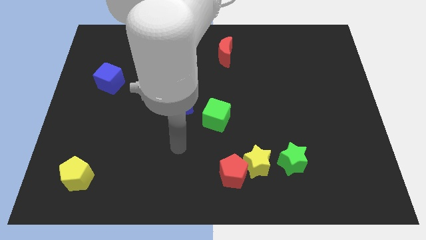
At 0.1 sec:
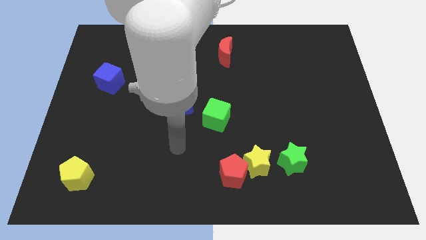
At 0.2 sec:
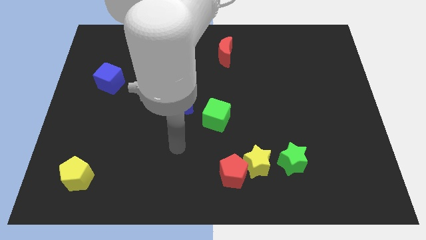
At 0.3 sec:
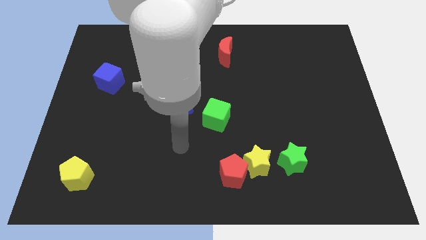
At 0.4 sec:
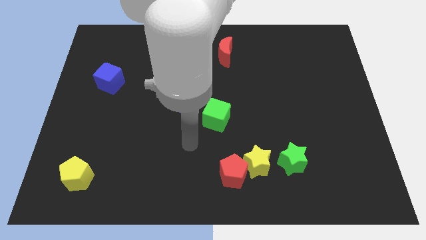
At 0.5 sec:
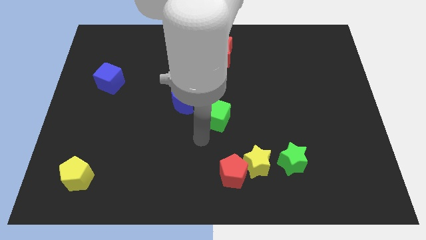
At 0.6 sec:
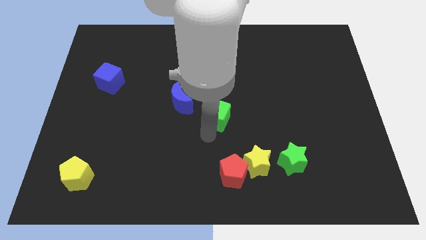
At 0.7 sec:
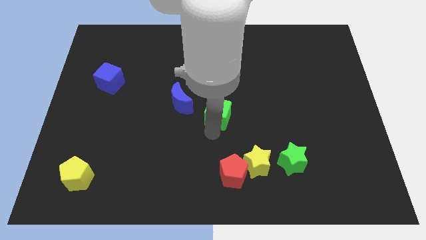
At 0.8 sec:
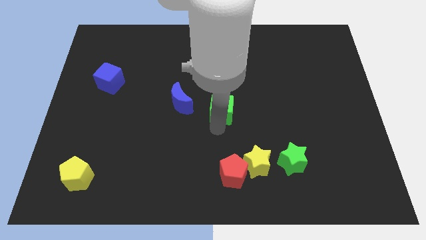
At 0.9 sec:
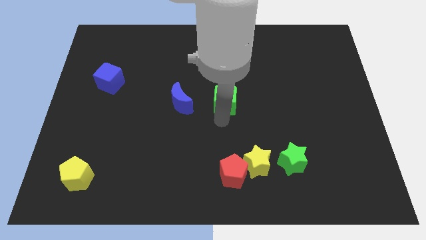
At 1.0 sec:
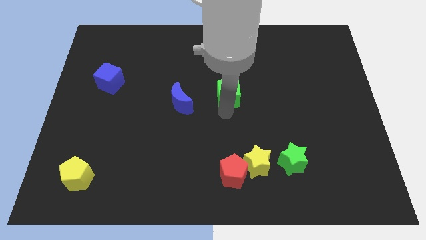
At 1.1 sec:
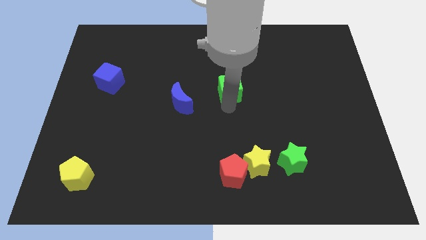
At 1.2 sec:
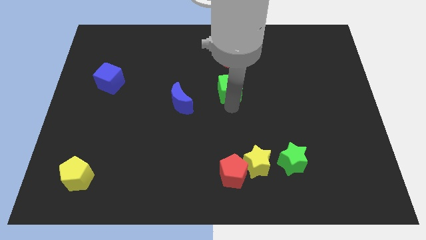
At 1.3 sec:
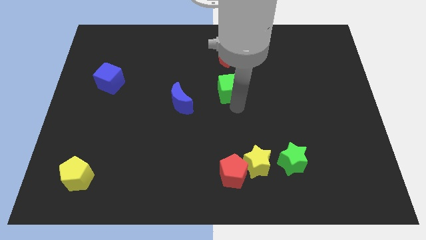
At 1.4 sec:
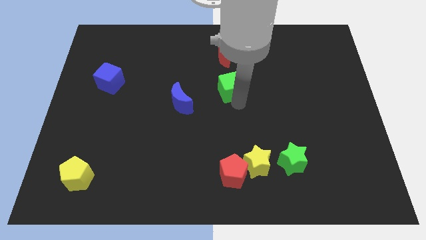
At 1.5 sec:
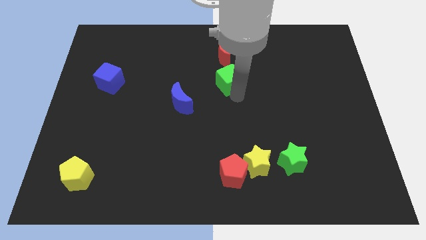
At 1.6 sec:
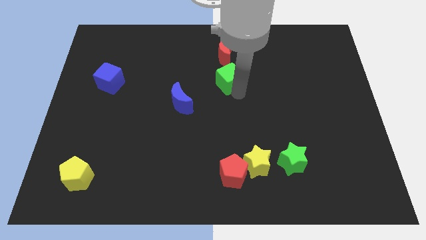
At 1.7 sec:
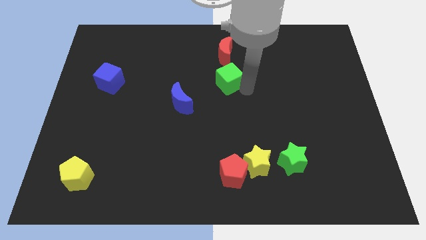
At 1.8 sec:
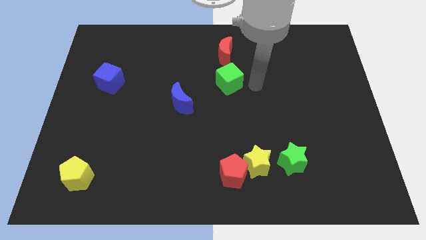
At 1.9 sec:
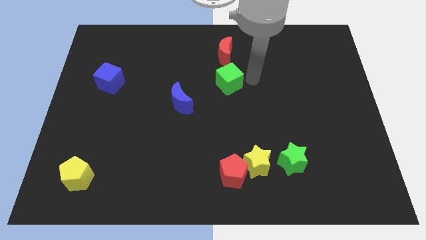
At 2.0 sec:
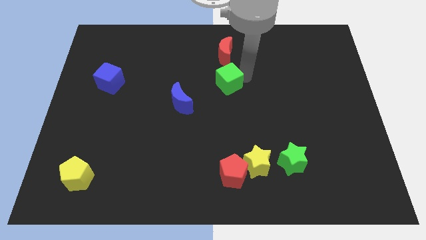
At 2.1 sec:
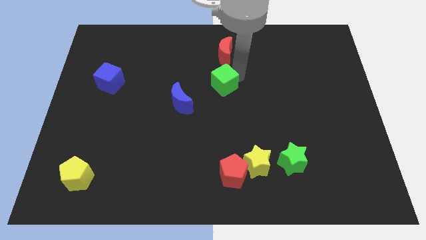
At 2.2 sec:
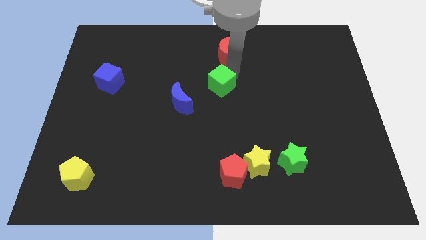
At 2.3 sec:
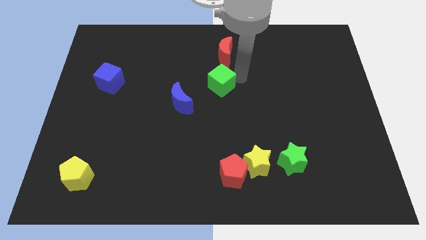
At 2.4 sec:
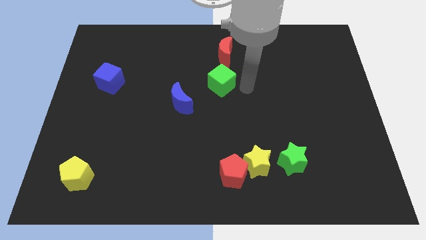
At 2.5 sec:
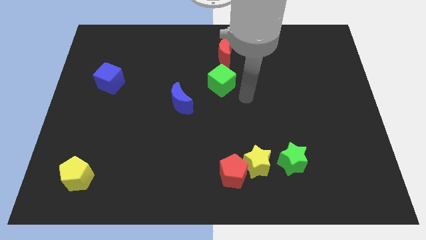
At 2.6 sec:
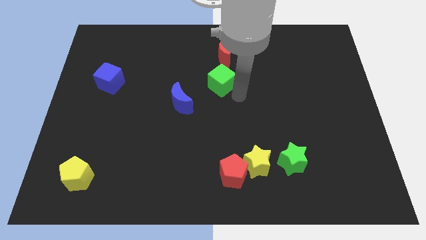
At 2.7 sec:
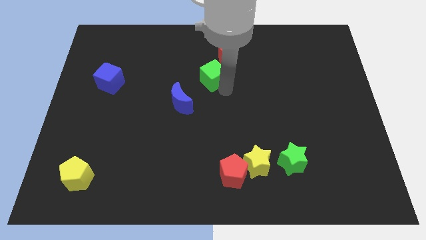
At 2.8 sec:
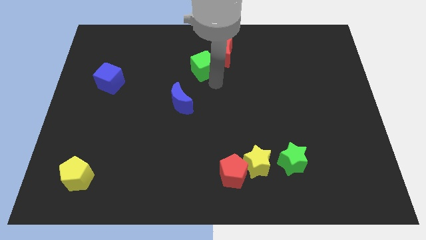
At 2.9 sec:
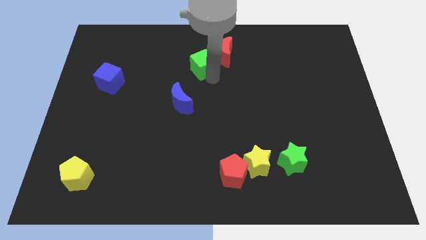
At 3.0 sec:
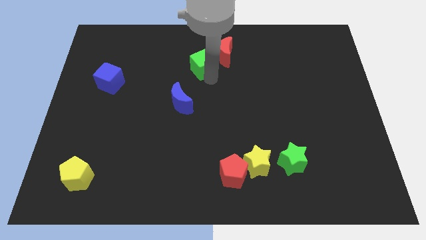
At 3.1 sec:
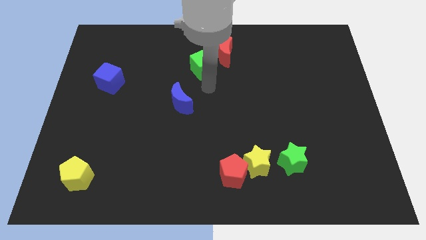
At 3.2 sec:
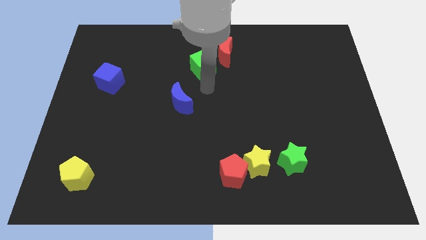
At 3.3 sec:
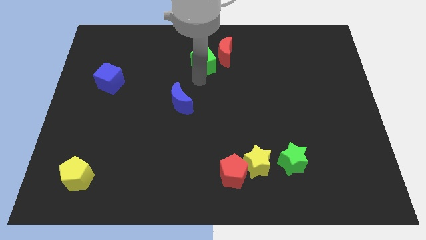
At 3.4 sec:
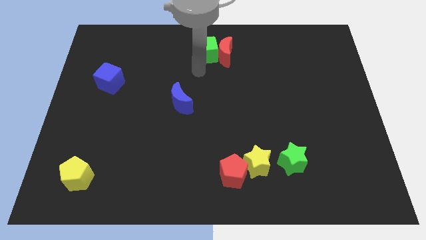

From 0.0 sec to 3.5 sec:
move the green cube to the left of the red moon

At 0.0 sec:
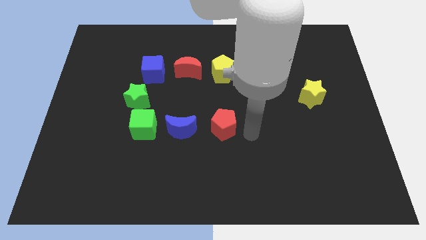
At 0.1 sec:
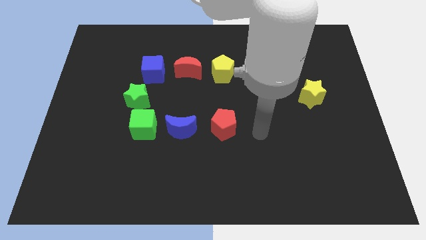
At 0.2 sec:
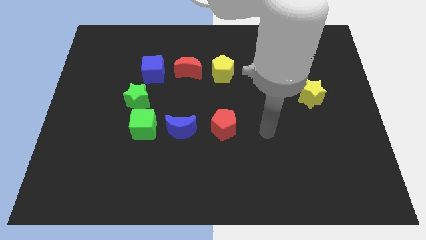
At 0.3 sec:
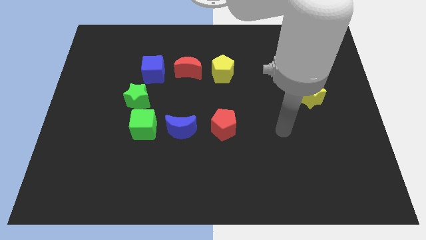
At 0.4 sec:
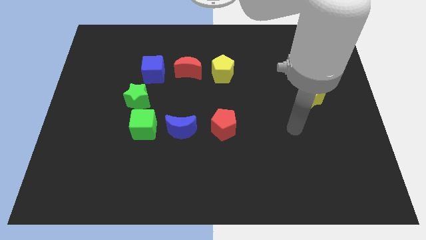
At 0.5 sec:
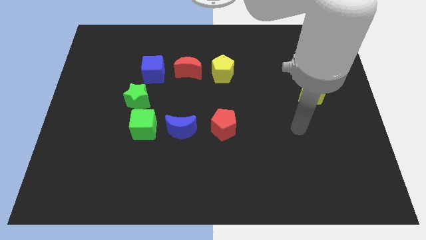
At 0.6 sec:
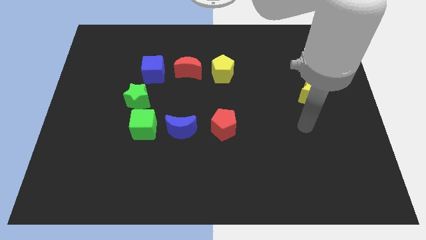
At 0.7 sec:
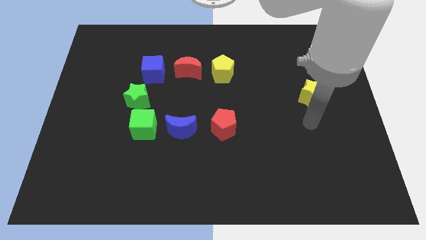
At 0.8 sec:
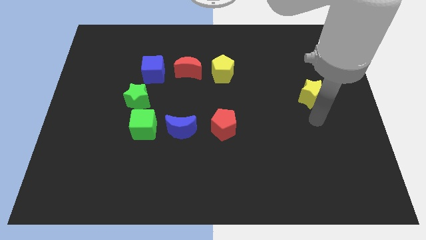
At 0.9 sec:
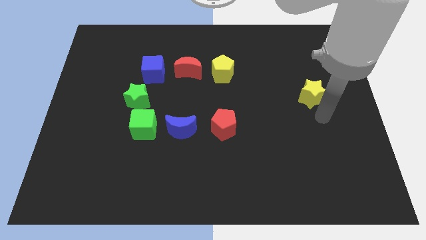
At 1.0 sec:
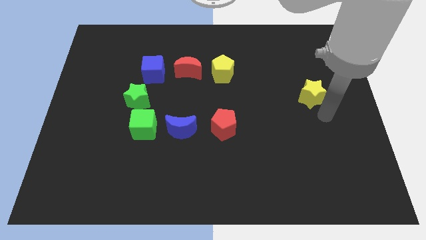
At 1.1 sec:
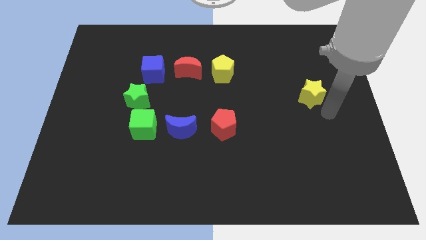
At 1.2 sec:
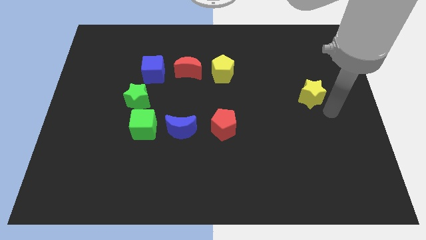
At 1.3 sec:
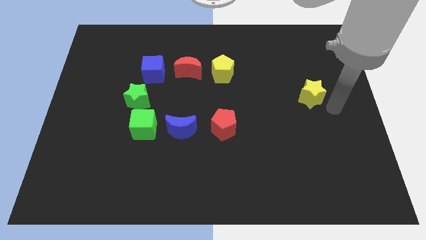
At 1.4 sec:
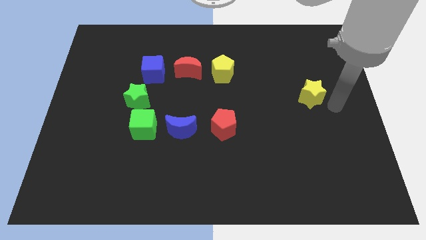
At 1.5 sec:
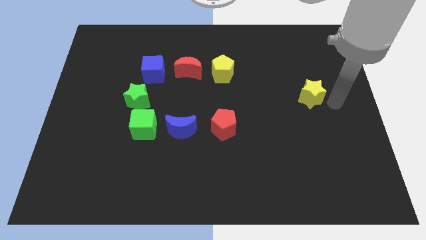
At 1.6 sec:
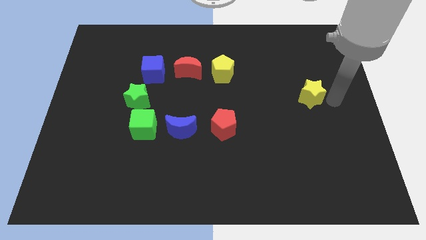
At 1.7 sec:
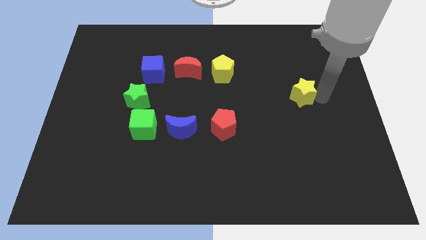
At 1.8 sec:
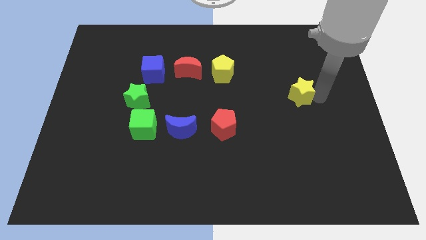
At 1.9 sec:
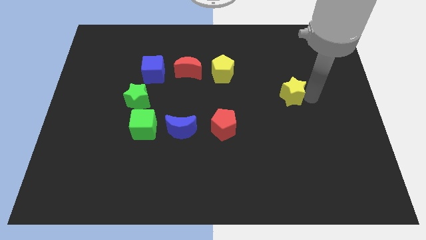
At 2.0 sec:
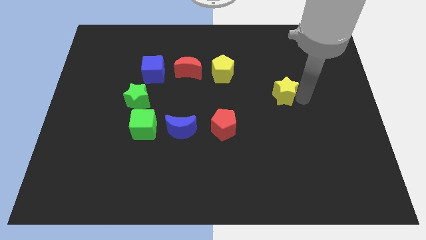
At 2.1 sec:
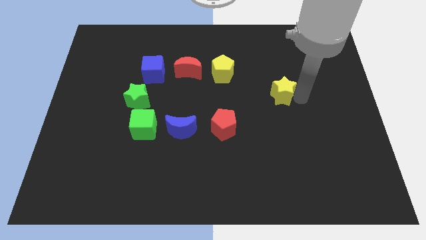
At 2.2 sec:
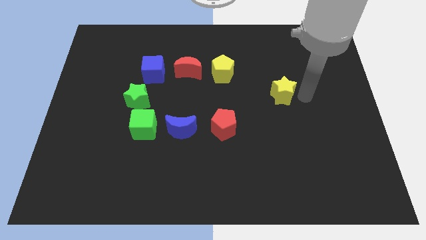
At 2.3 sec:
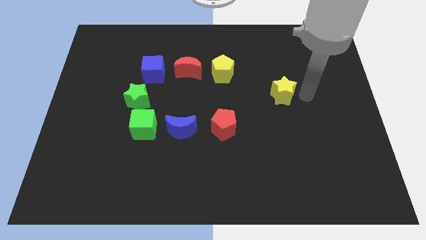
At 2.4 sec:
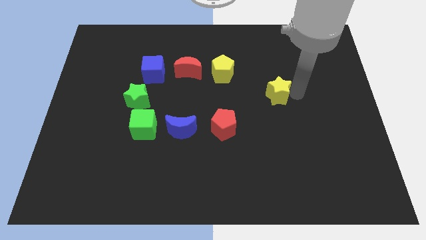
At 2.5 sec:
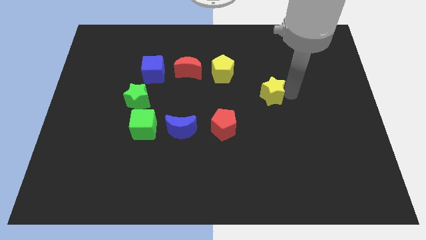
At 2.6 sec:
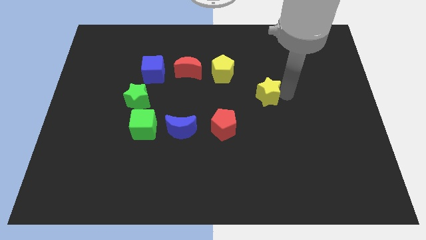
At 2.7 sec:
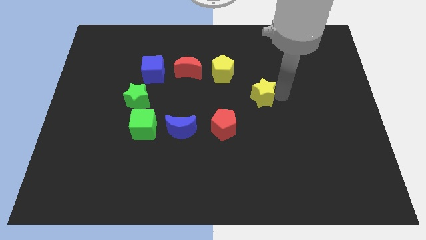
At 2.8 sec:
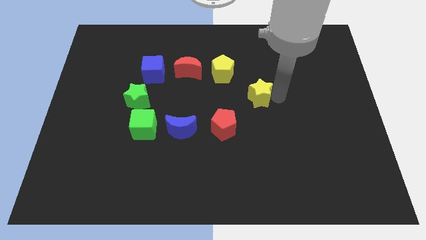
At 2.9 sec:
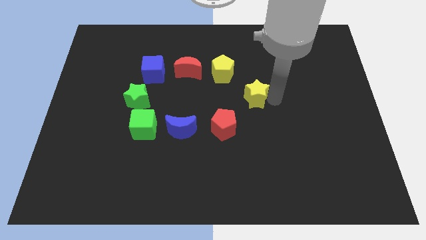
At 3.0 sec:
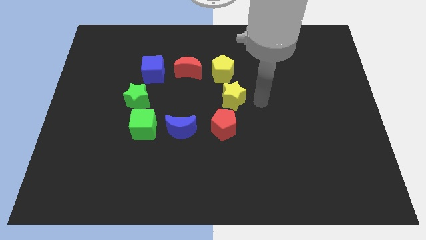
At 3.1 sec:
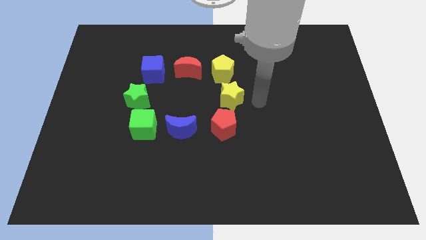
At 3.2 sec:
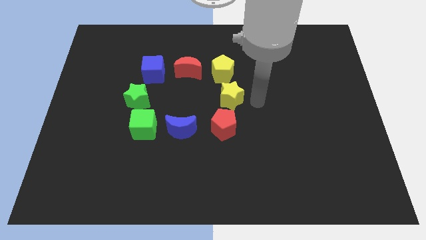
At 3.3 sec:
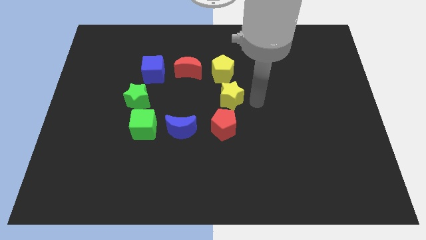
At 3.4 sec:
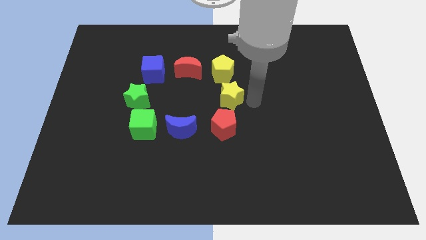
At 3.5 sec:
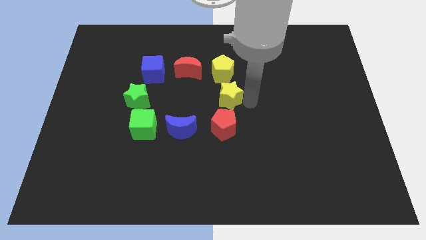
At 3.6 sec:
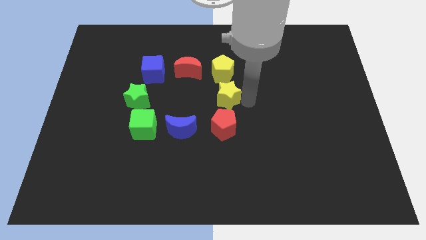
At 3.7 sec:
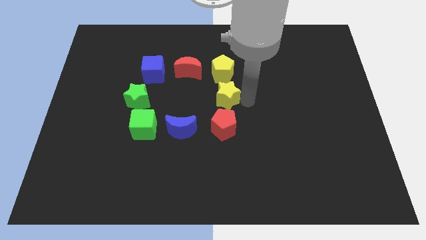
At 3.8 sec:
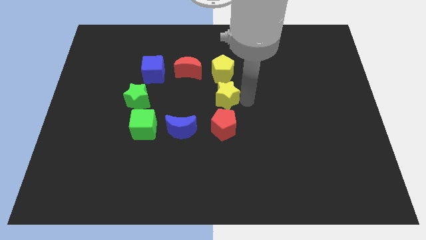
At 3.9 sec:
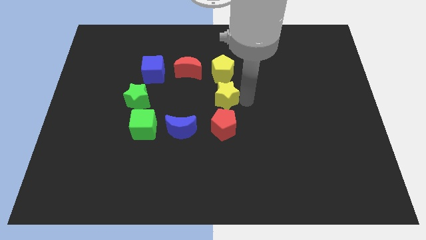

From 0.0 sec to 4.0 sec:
move the yellow star above the red pentagon

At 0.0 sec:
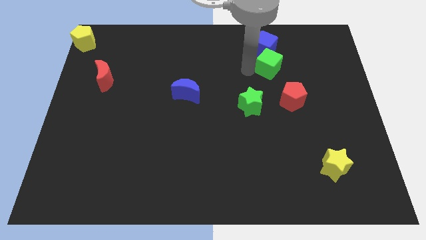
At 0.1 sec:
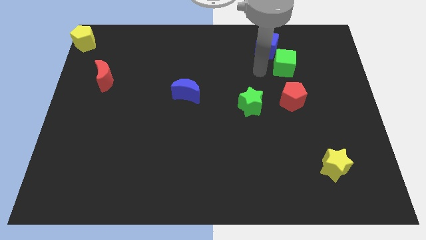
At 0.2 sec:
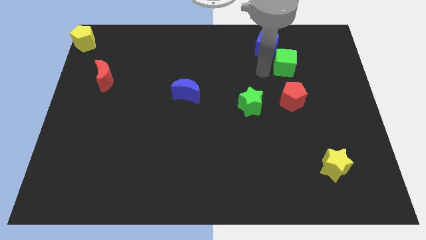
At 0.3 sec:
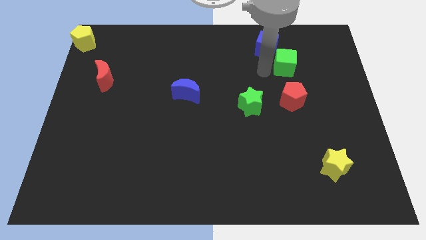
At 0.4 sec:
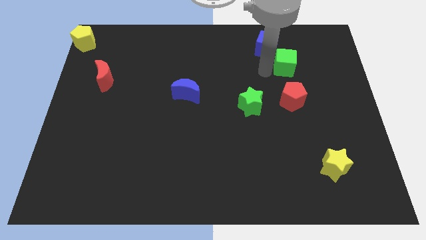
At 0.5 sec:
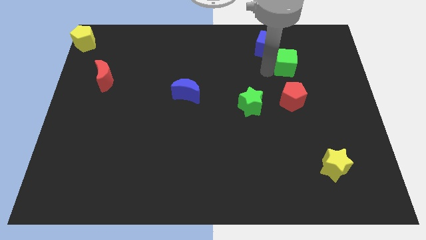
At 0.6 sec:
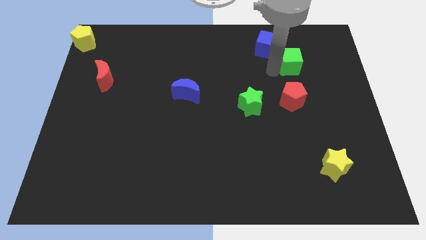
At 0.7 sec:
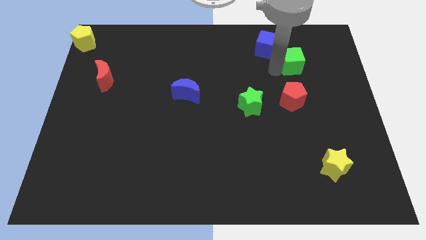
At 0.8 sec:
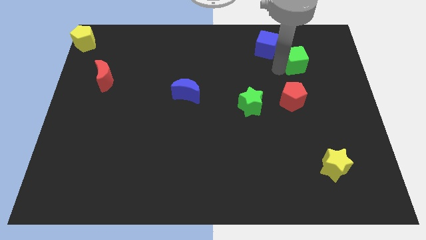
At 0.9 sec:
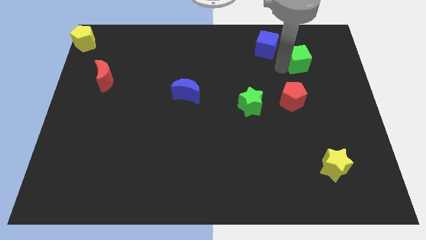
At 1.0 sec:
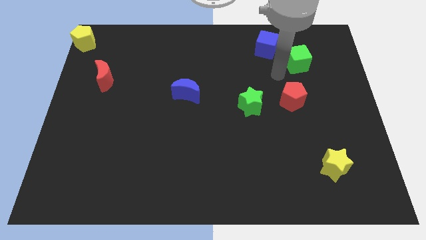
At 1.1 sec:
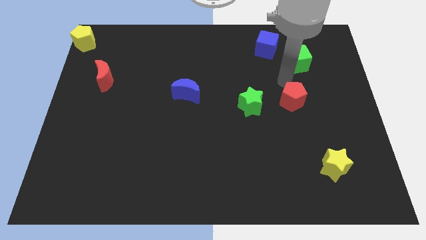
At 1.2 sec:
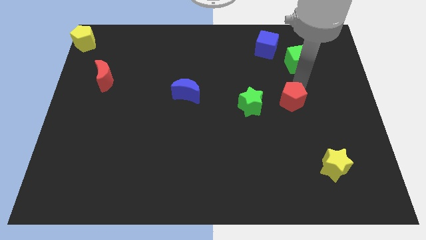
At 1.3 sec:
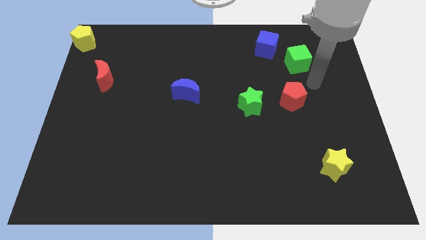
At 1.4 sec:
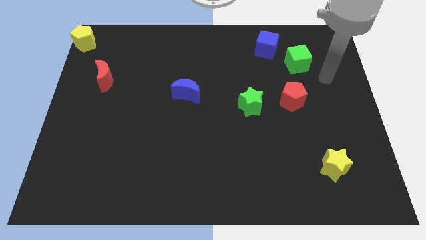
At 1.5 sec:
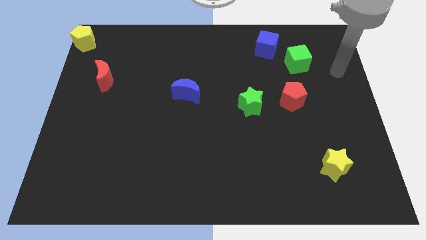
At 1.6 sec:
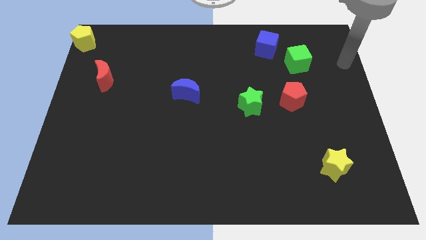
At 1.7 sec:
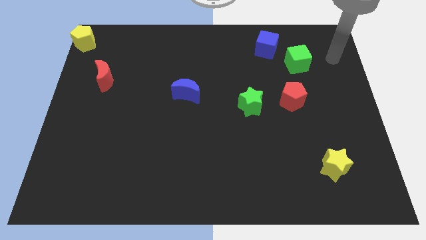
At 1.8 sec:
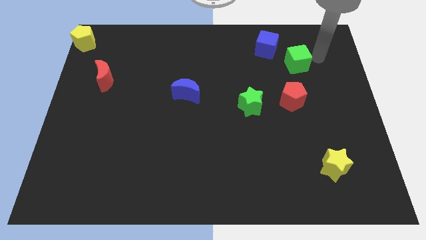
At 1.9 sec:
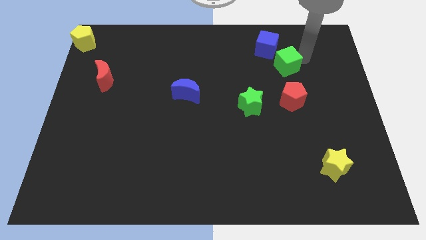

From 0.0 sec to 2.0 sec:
separate green cube from the blue cube
